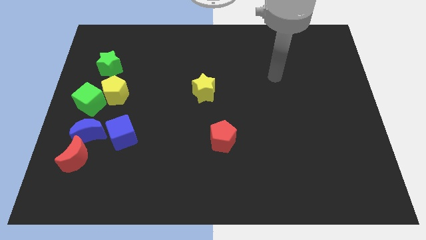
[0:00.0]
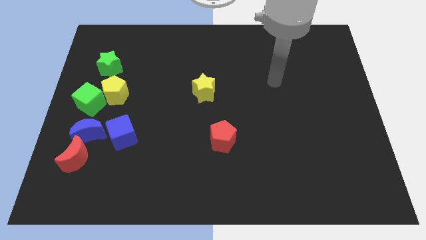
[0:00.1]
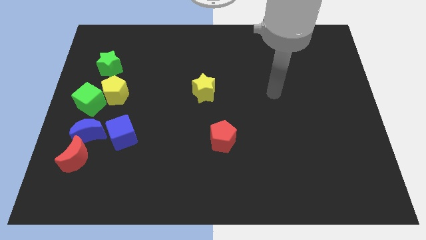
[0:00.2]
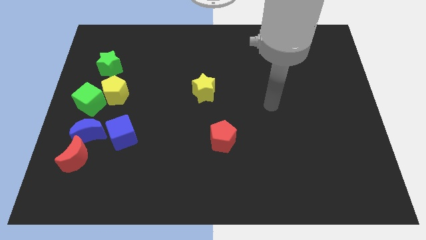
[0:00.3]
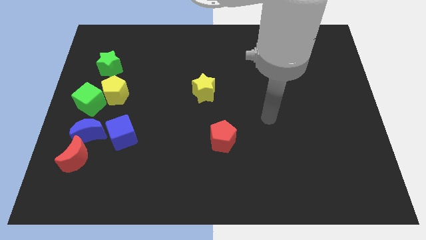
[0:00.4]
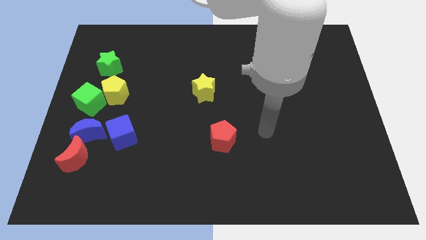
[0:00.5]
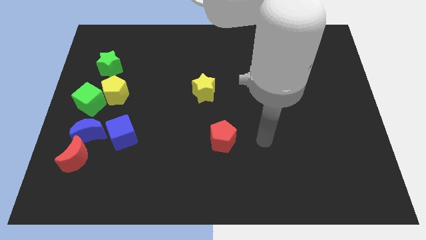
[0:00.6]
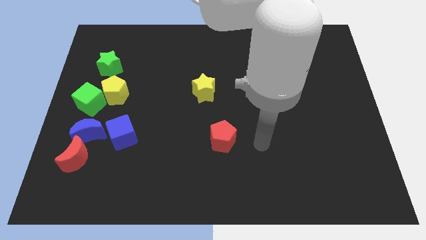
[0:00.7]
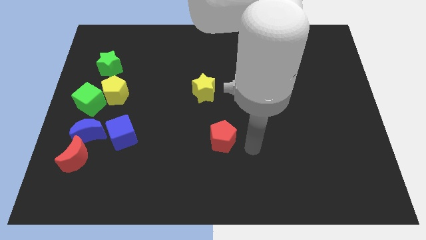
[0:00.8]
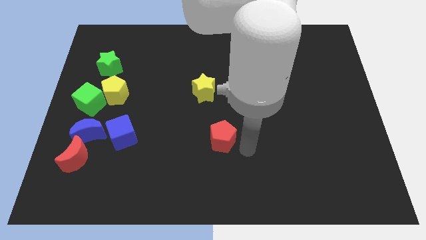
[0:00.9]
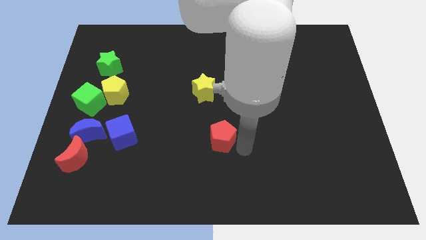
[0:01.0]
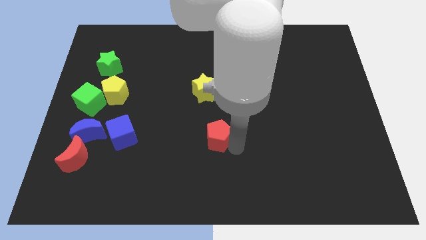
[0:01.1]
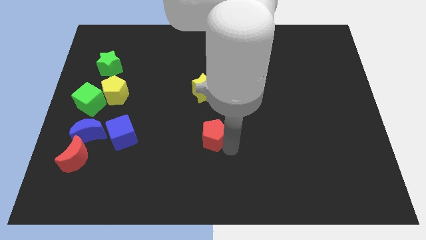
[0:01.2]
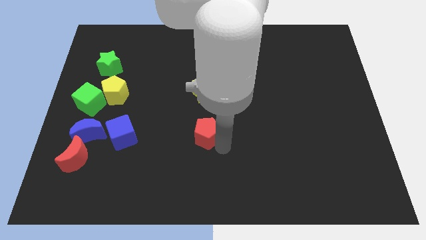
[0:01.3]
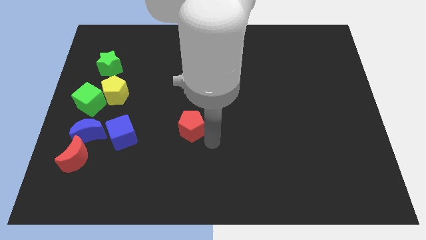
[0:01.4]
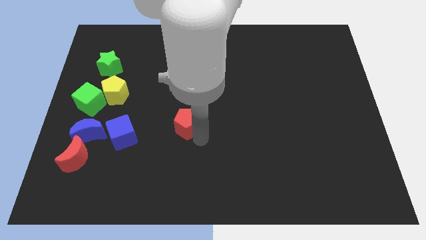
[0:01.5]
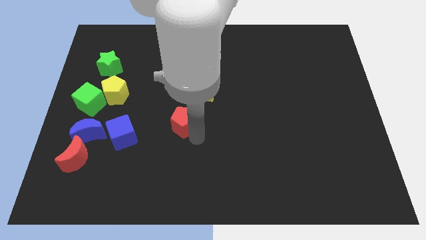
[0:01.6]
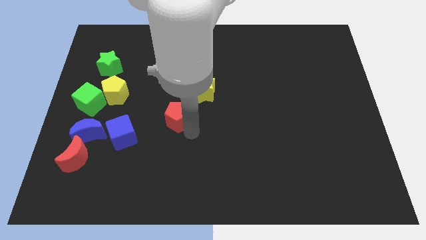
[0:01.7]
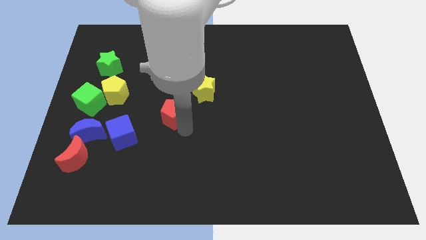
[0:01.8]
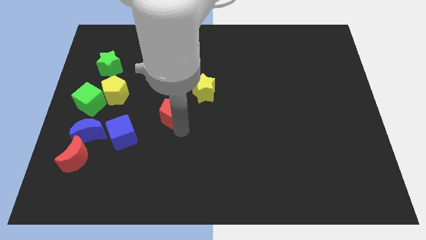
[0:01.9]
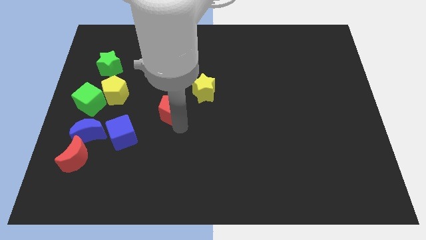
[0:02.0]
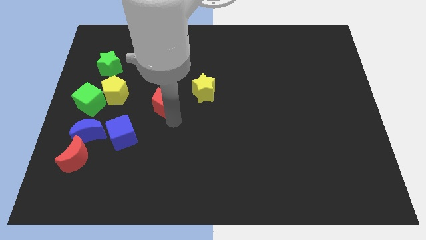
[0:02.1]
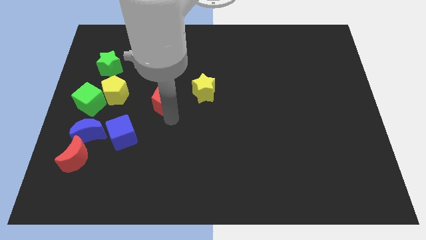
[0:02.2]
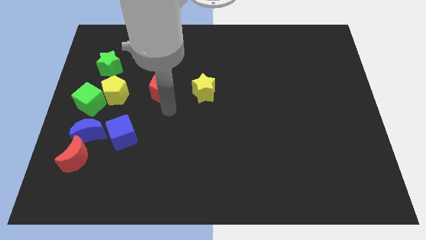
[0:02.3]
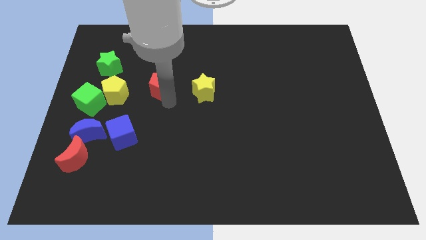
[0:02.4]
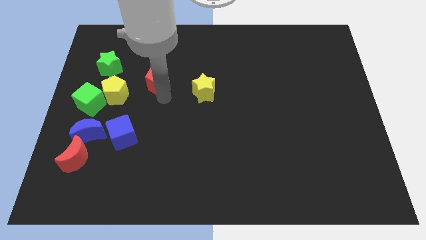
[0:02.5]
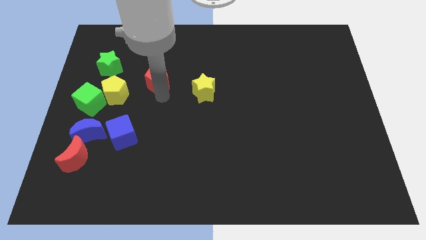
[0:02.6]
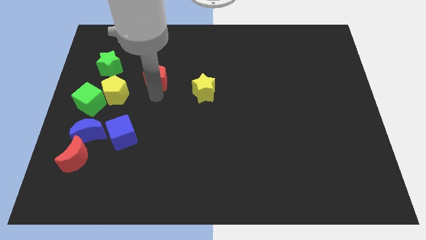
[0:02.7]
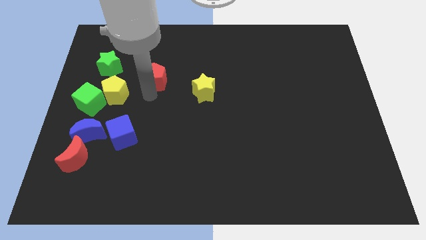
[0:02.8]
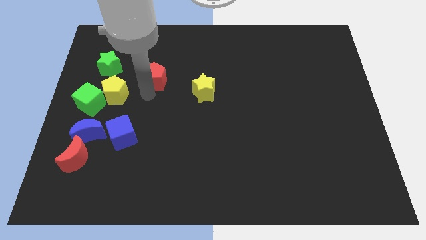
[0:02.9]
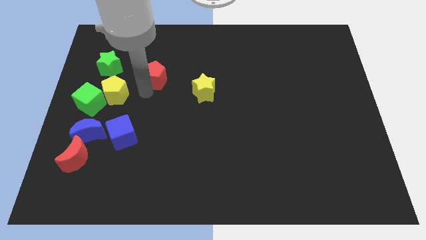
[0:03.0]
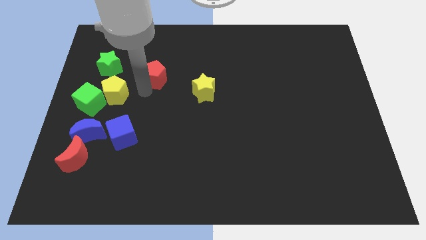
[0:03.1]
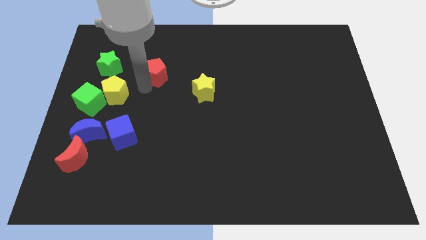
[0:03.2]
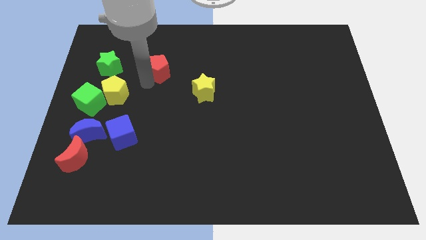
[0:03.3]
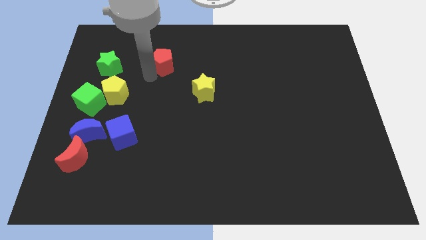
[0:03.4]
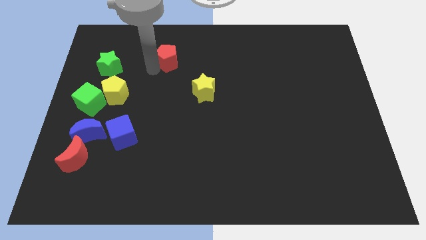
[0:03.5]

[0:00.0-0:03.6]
slide the red pentagon parallel to yellow pentagon

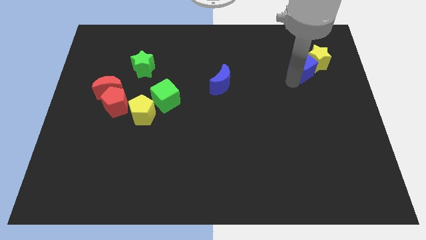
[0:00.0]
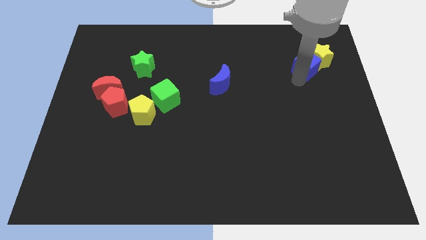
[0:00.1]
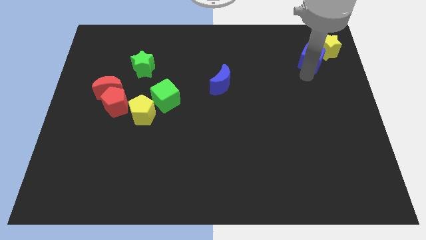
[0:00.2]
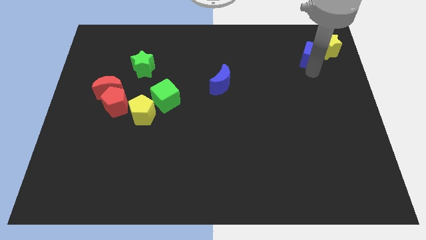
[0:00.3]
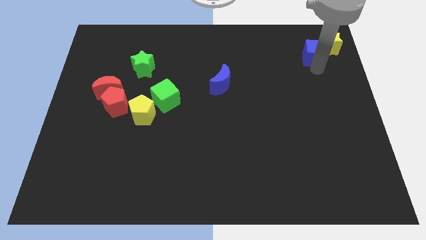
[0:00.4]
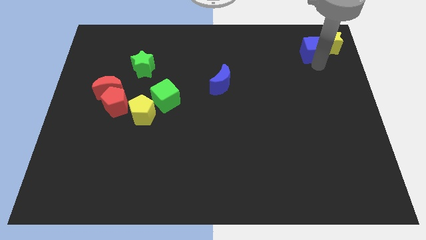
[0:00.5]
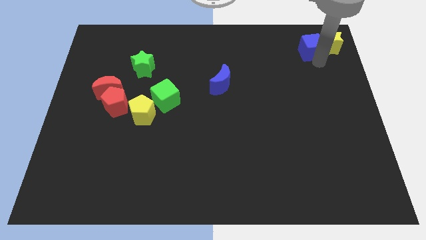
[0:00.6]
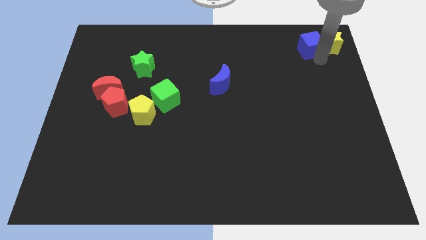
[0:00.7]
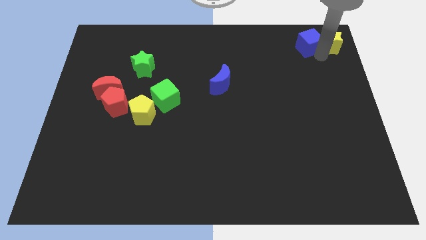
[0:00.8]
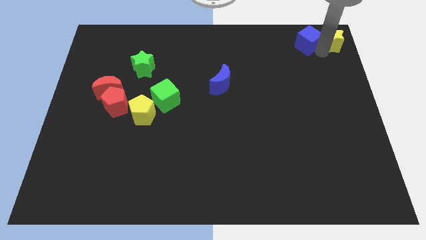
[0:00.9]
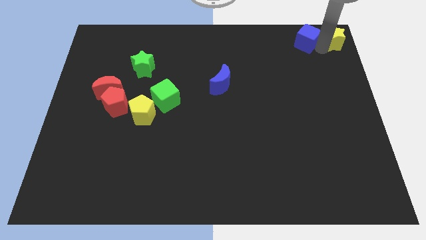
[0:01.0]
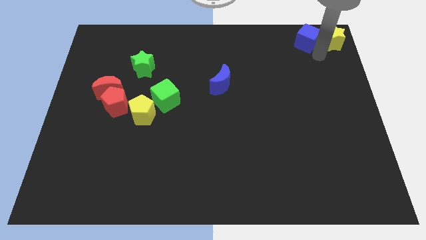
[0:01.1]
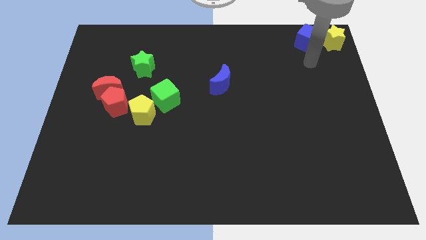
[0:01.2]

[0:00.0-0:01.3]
push the blue cube and yellow star to the top right corner of the board

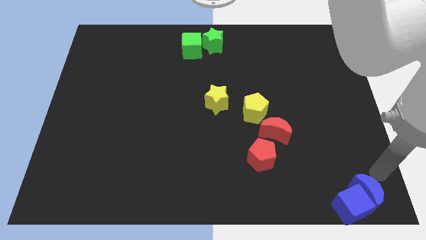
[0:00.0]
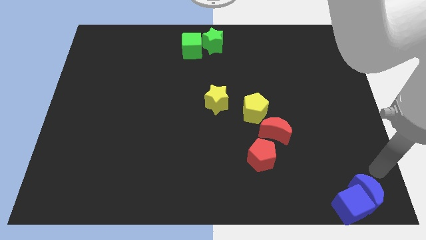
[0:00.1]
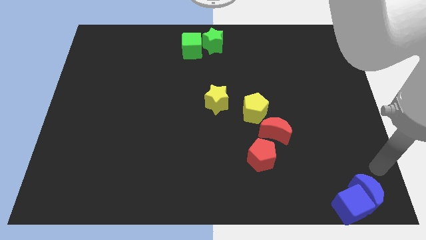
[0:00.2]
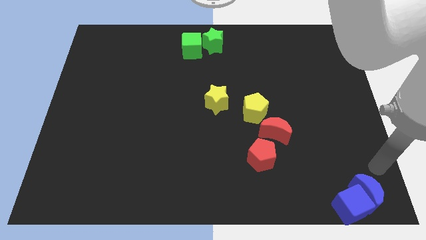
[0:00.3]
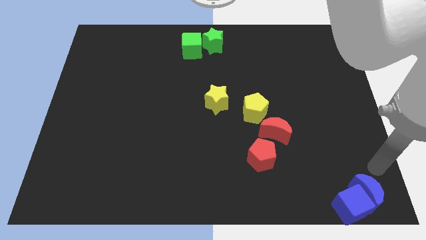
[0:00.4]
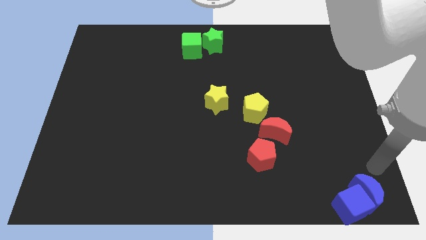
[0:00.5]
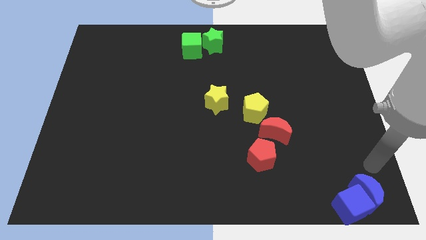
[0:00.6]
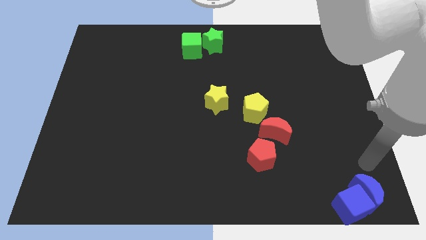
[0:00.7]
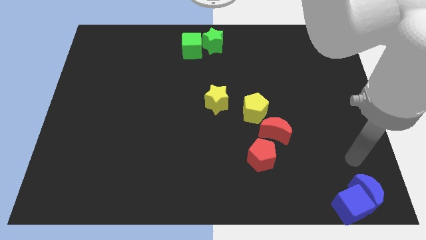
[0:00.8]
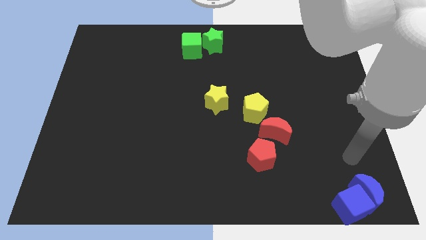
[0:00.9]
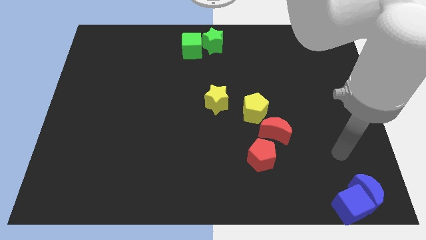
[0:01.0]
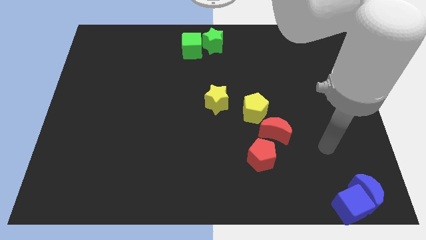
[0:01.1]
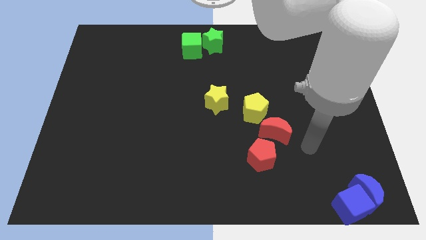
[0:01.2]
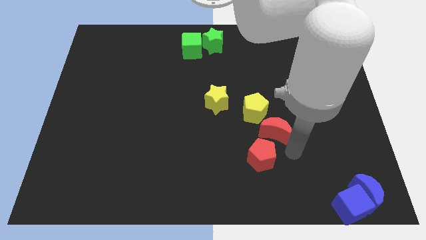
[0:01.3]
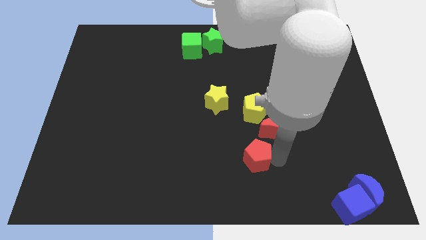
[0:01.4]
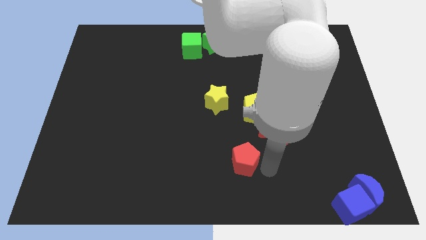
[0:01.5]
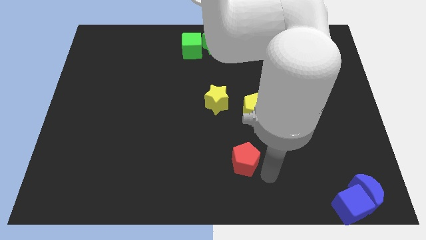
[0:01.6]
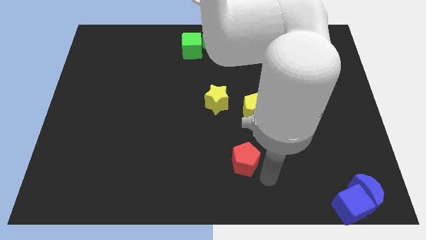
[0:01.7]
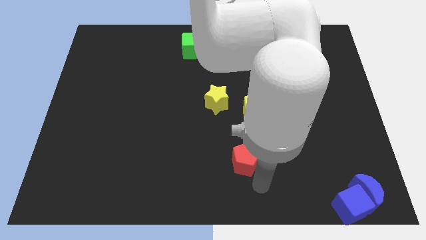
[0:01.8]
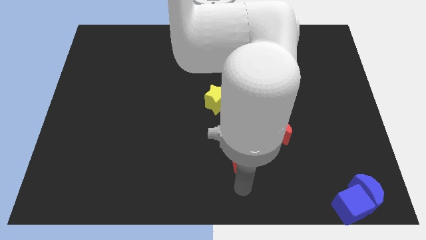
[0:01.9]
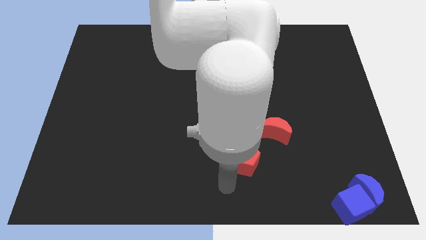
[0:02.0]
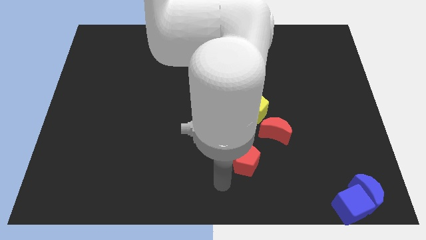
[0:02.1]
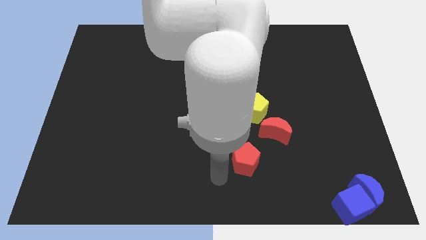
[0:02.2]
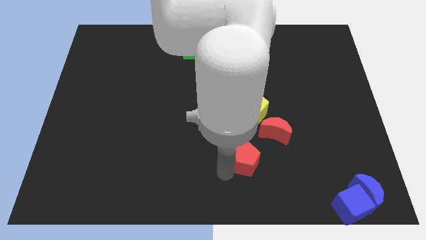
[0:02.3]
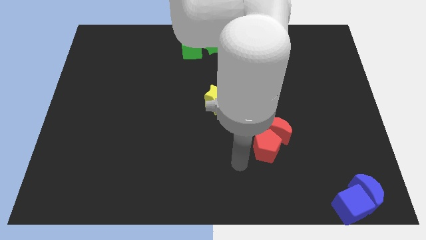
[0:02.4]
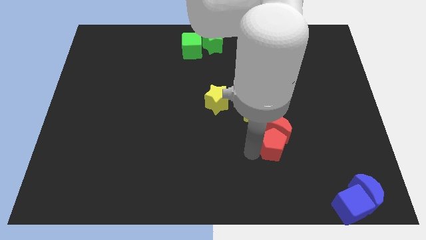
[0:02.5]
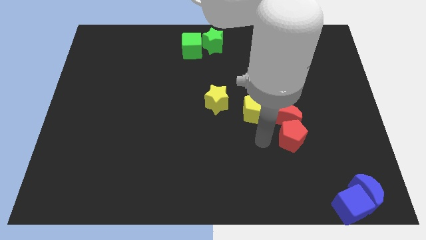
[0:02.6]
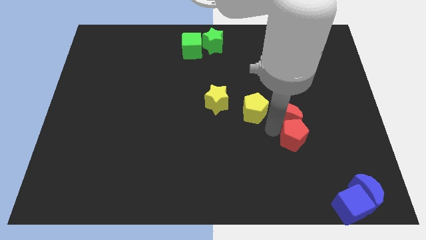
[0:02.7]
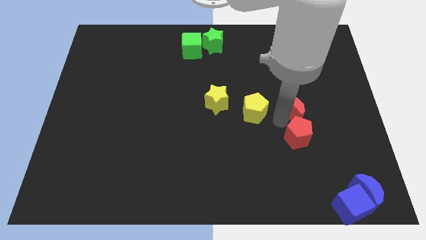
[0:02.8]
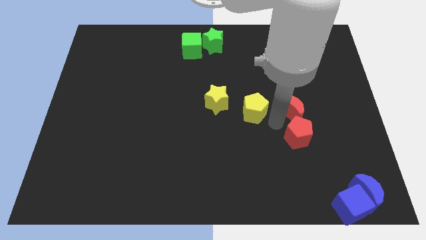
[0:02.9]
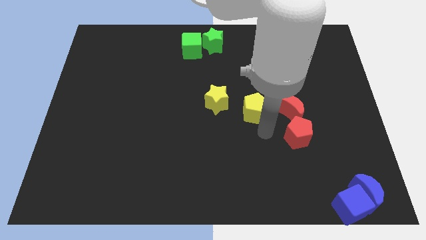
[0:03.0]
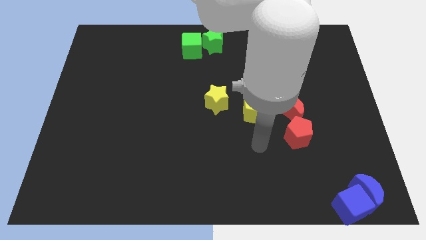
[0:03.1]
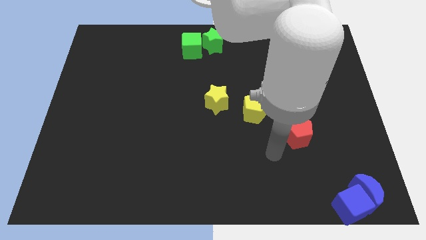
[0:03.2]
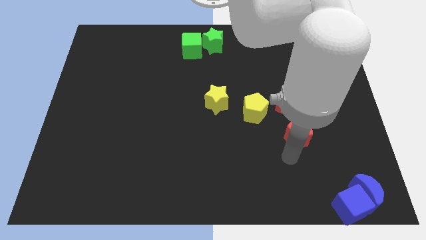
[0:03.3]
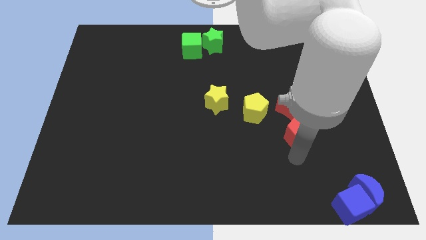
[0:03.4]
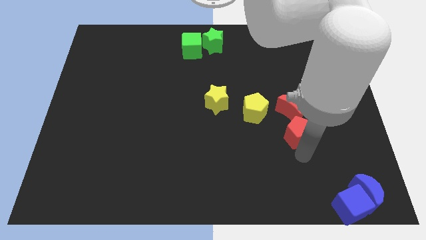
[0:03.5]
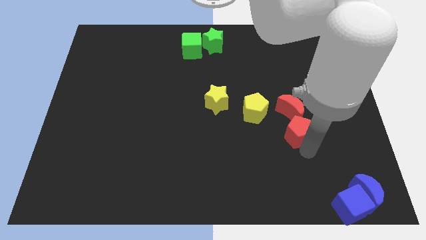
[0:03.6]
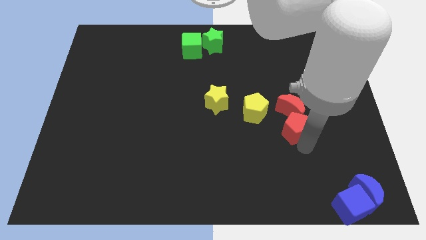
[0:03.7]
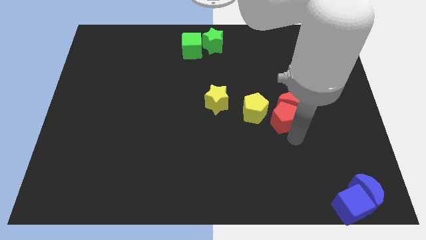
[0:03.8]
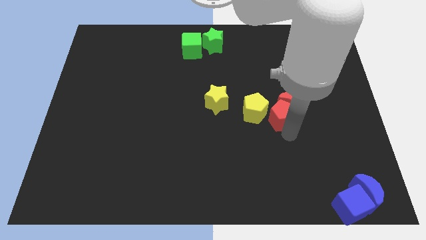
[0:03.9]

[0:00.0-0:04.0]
slide the red pentagon into the red moon
